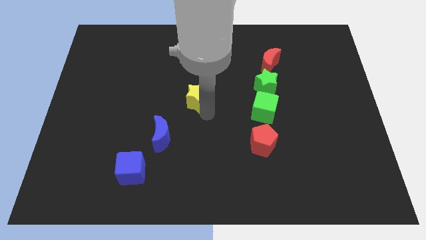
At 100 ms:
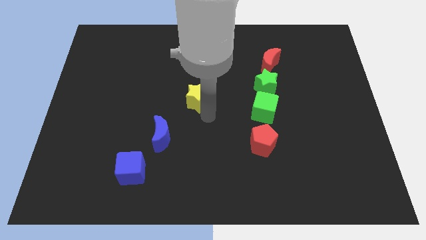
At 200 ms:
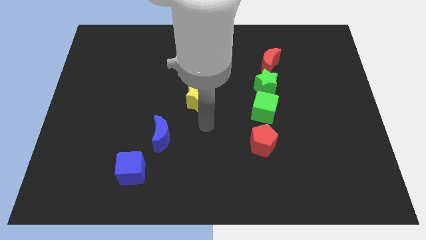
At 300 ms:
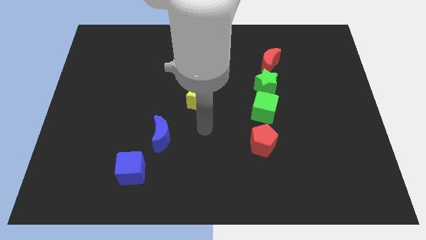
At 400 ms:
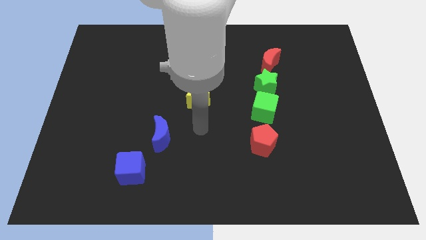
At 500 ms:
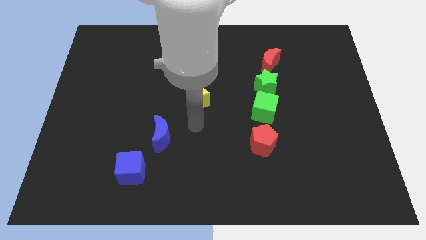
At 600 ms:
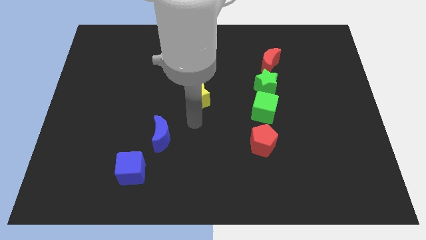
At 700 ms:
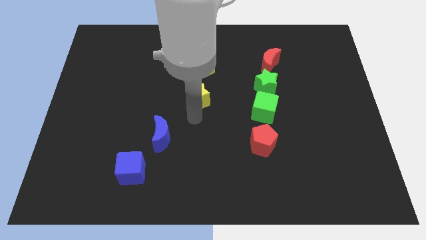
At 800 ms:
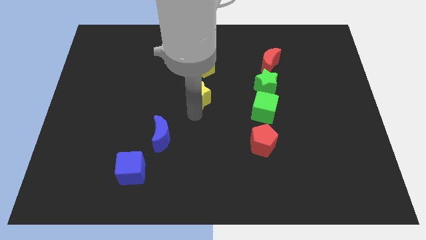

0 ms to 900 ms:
place your arm to the bottom of the yellow star

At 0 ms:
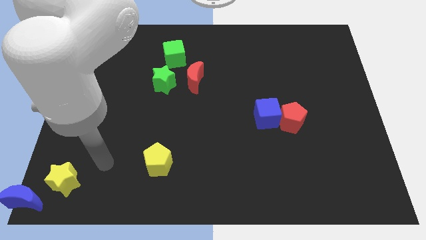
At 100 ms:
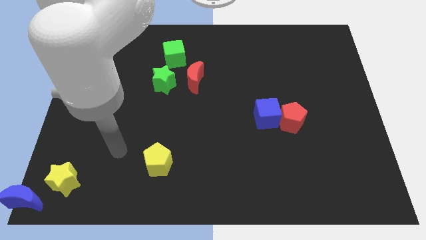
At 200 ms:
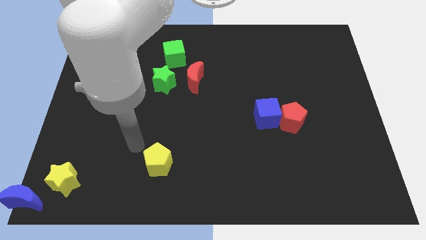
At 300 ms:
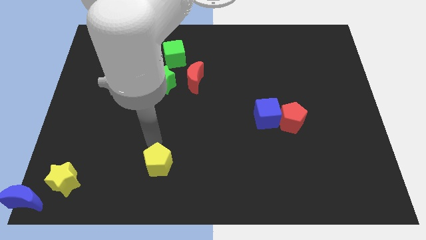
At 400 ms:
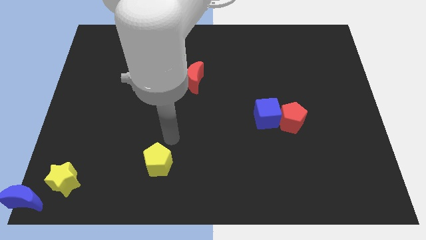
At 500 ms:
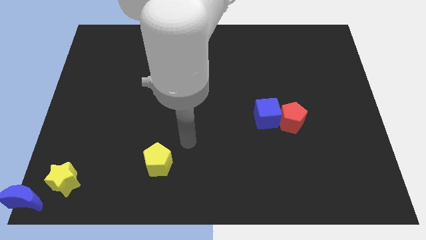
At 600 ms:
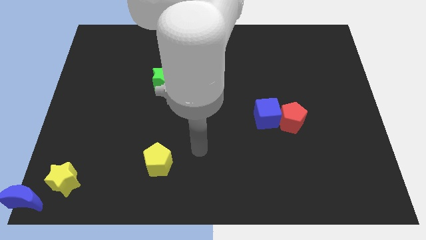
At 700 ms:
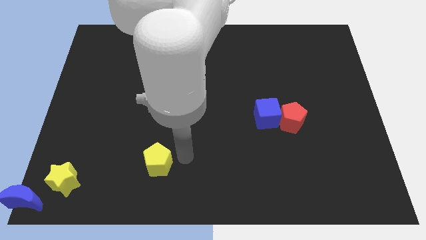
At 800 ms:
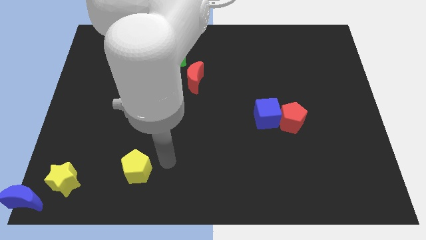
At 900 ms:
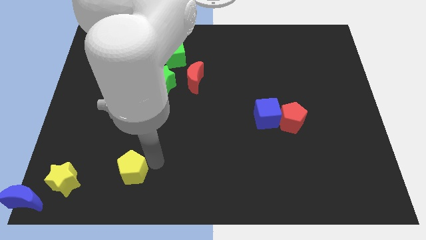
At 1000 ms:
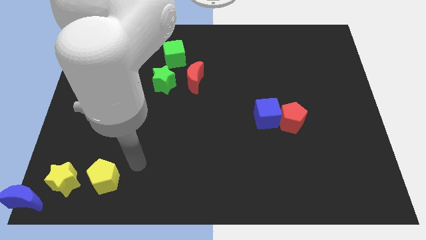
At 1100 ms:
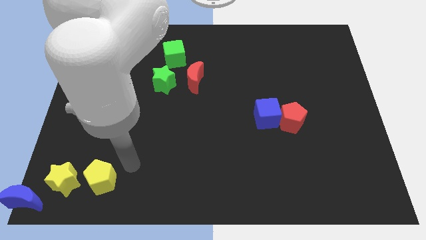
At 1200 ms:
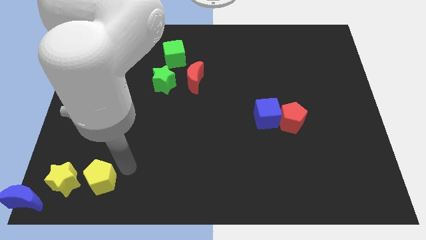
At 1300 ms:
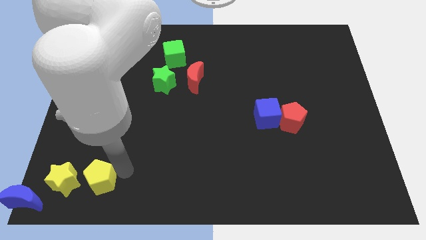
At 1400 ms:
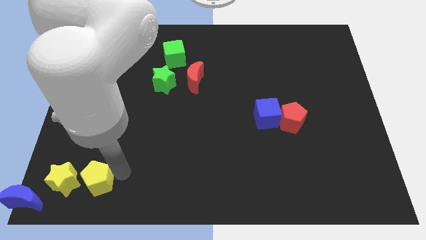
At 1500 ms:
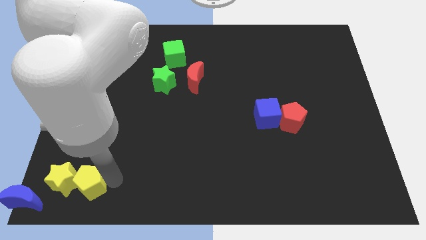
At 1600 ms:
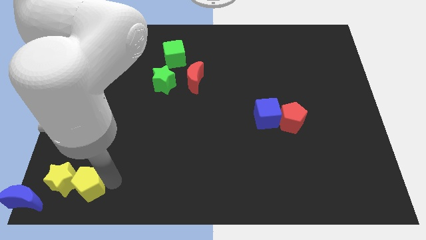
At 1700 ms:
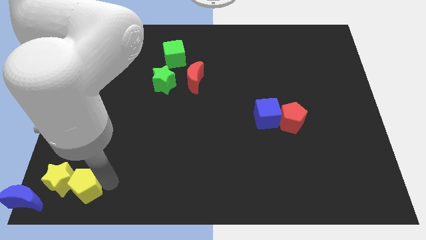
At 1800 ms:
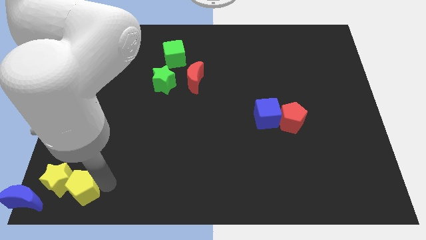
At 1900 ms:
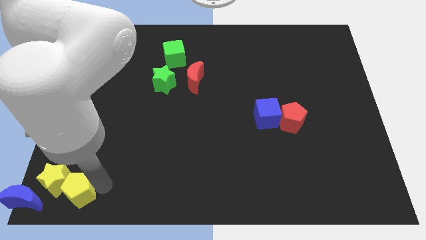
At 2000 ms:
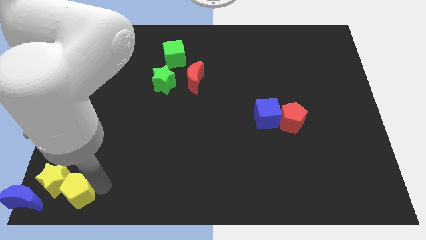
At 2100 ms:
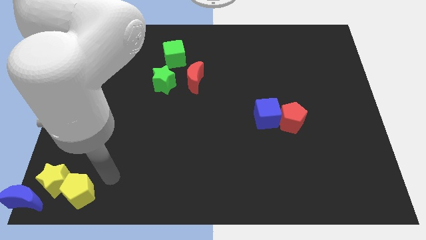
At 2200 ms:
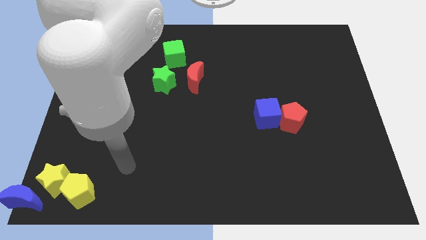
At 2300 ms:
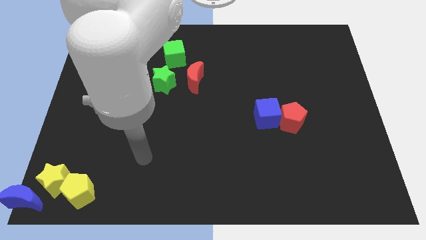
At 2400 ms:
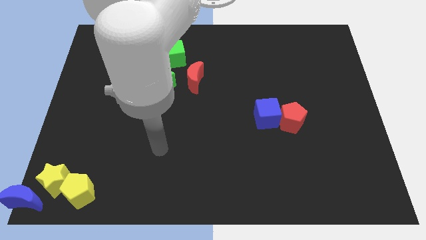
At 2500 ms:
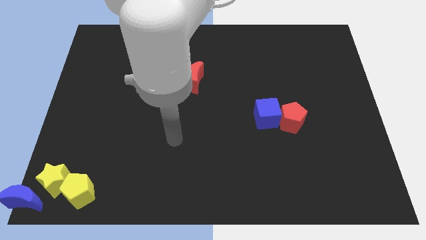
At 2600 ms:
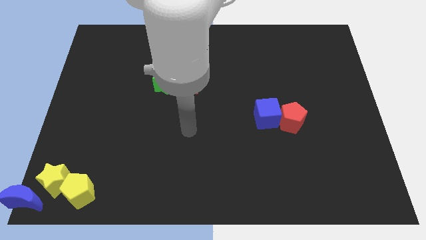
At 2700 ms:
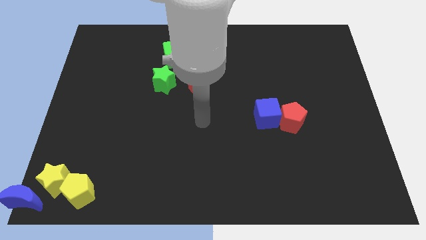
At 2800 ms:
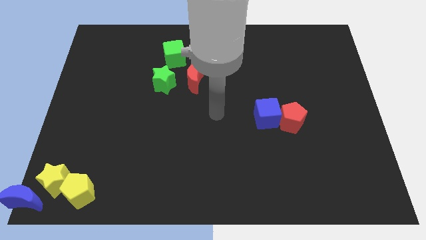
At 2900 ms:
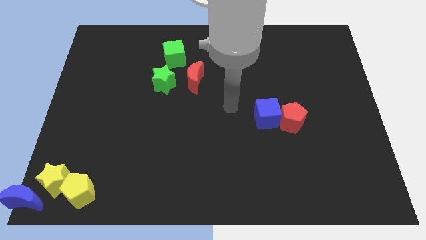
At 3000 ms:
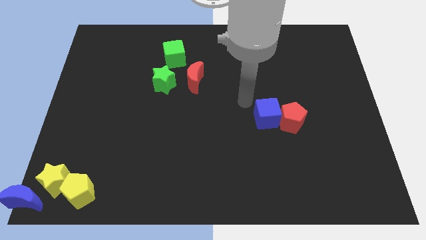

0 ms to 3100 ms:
push the yellow pentagon to the bottom left of the board

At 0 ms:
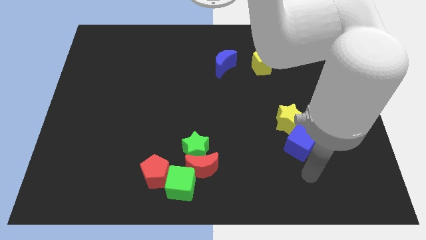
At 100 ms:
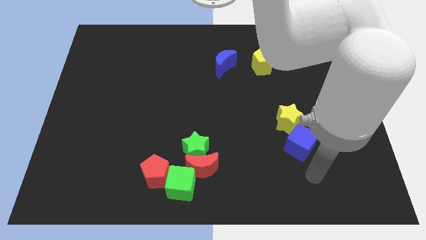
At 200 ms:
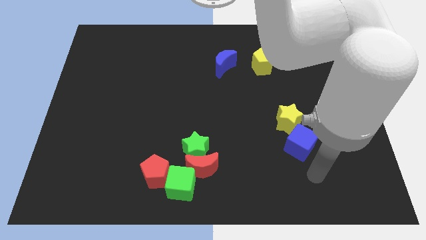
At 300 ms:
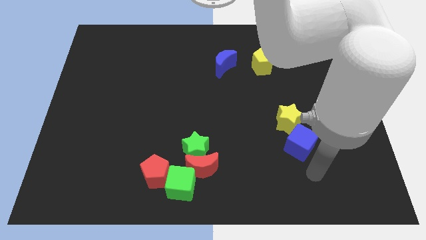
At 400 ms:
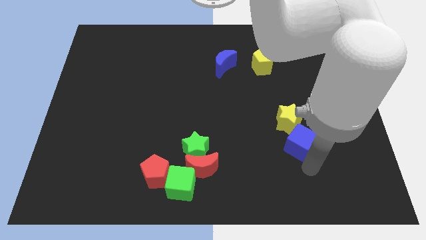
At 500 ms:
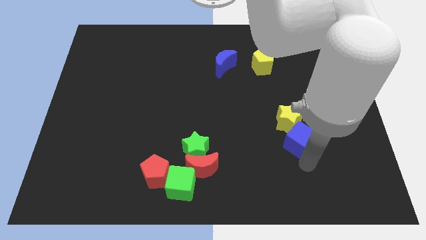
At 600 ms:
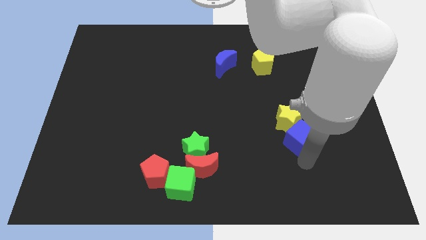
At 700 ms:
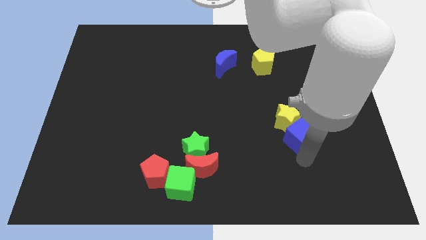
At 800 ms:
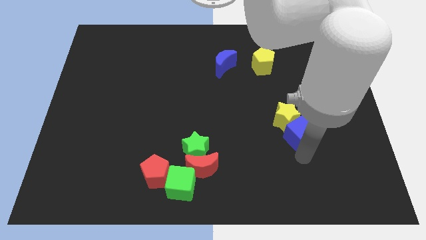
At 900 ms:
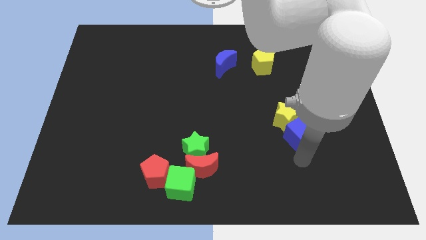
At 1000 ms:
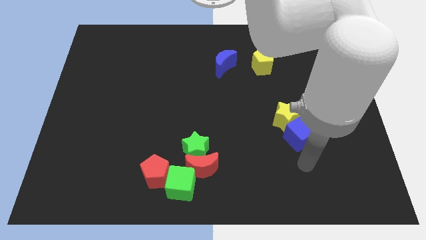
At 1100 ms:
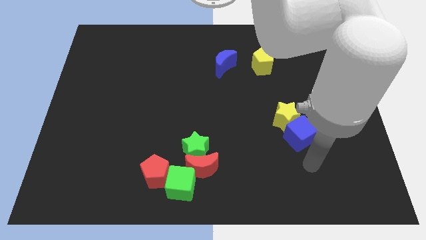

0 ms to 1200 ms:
push the blue cube and the yellow star slightly upwards

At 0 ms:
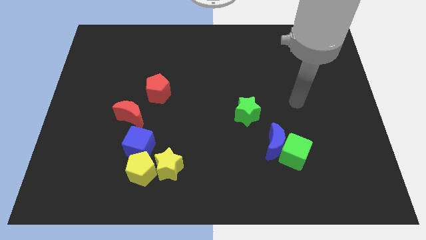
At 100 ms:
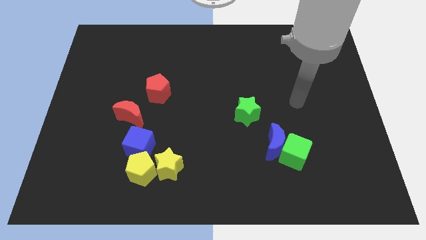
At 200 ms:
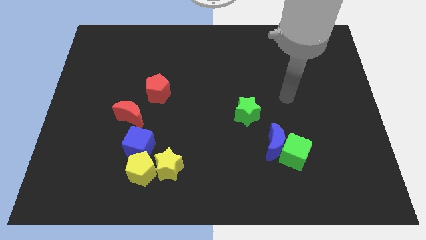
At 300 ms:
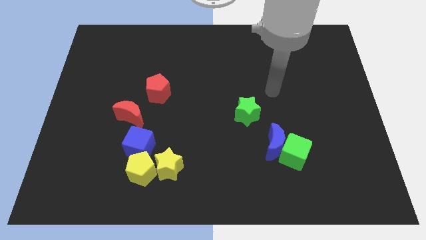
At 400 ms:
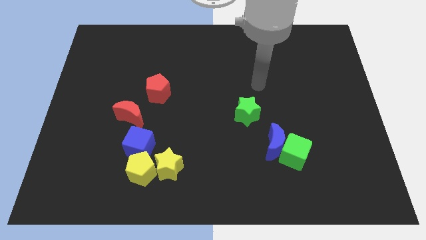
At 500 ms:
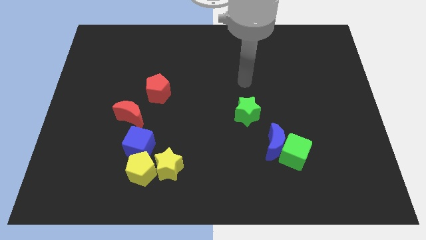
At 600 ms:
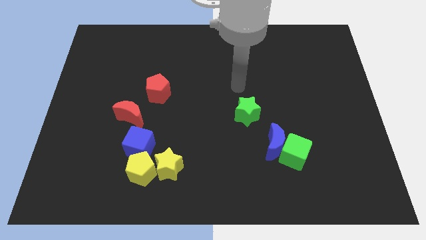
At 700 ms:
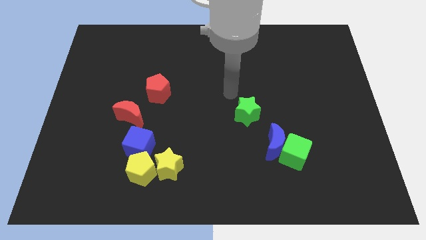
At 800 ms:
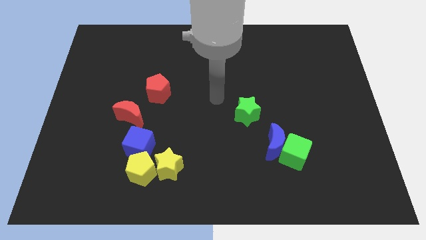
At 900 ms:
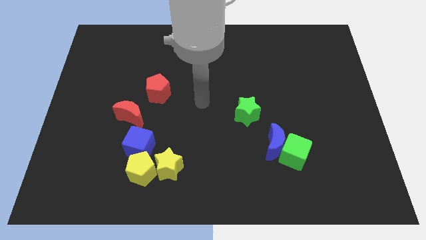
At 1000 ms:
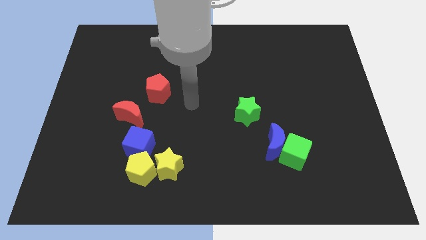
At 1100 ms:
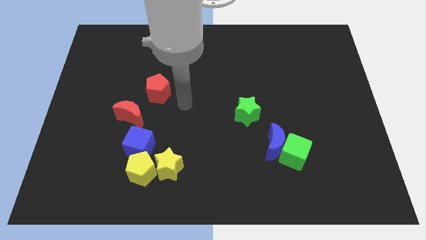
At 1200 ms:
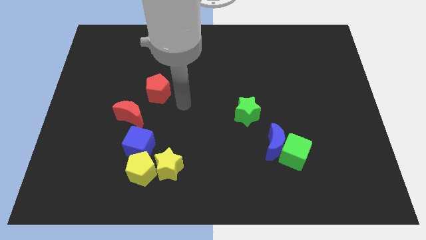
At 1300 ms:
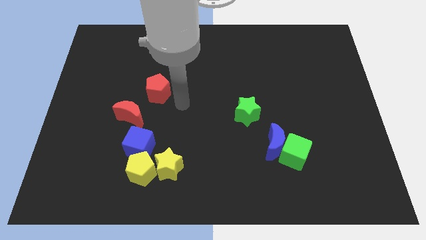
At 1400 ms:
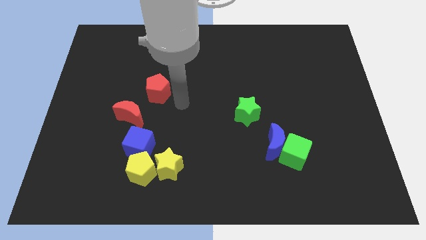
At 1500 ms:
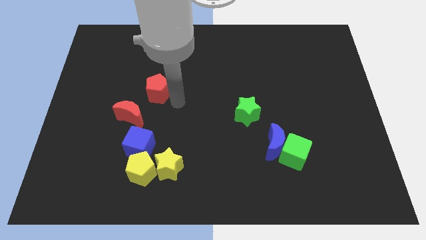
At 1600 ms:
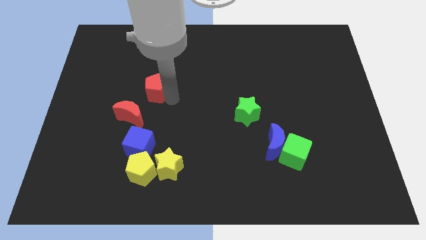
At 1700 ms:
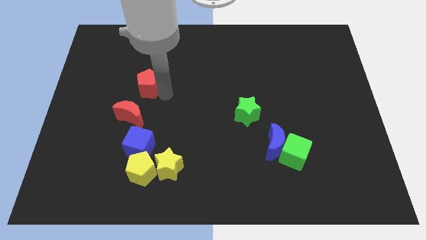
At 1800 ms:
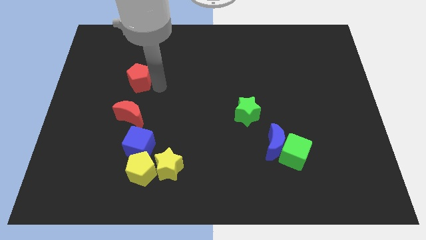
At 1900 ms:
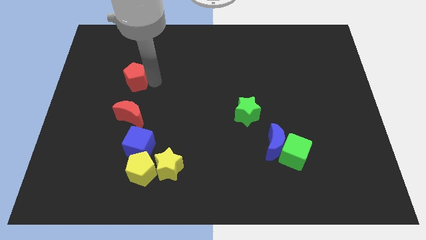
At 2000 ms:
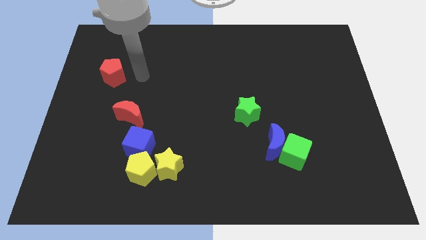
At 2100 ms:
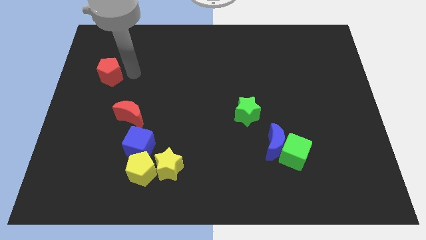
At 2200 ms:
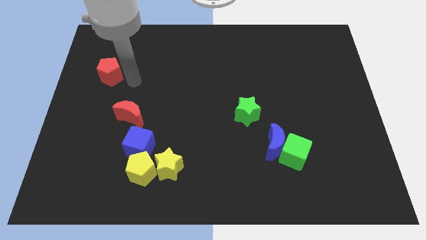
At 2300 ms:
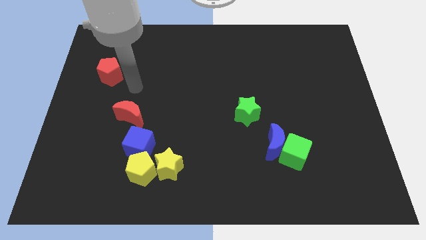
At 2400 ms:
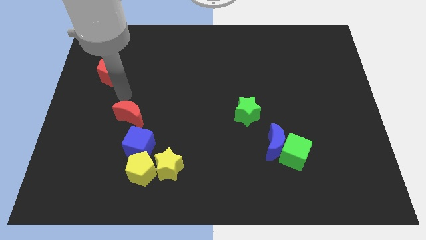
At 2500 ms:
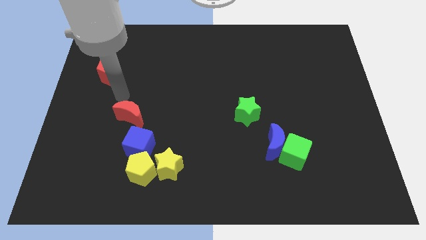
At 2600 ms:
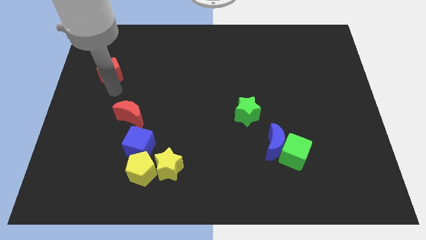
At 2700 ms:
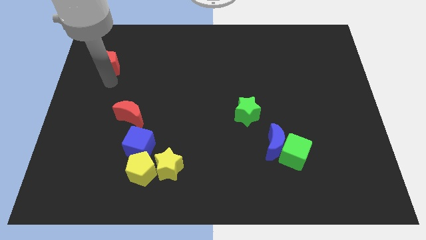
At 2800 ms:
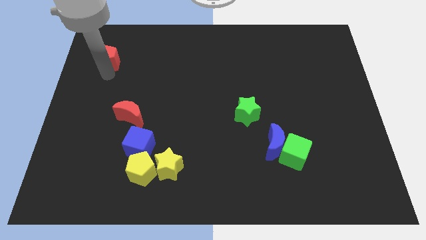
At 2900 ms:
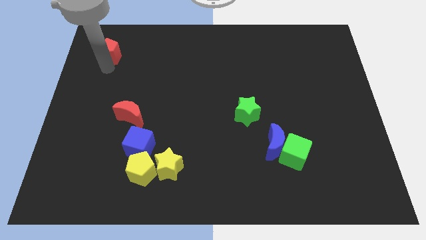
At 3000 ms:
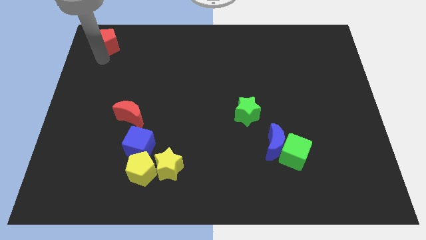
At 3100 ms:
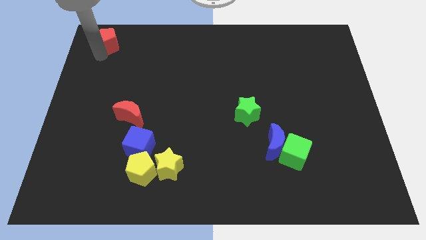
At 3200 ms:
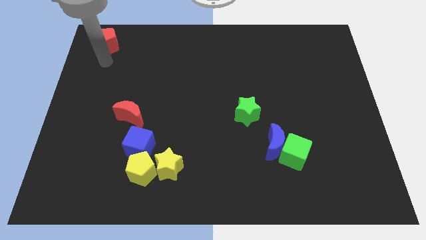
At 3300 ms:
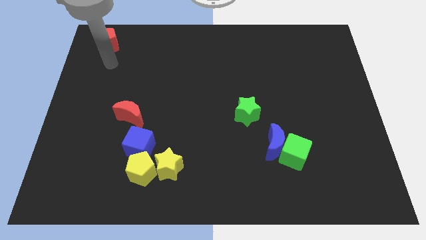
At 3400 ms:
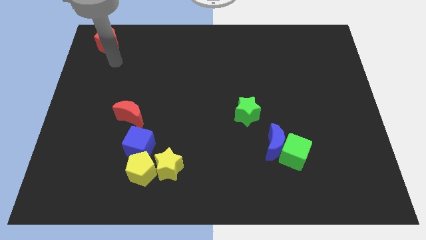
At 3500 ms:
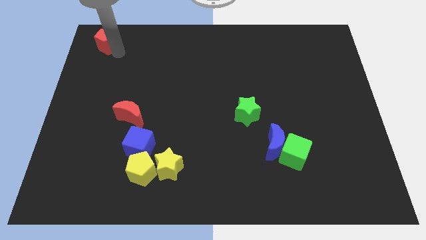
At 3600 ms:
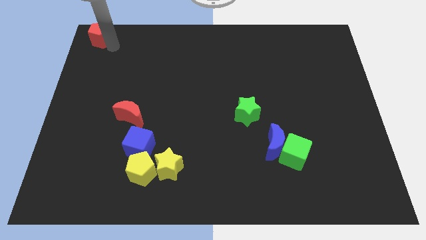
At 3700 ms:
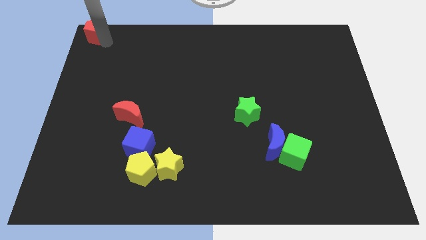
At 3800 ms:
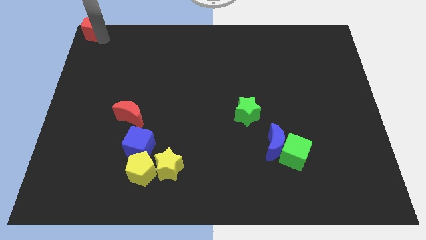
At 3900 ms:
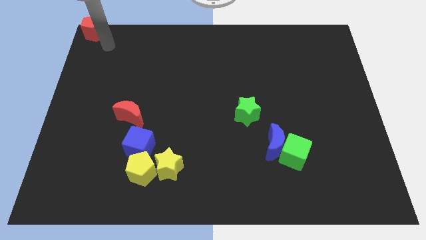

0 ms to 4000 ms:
place the red pentagon at the top left corner of the board
